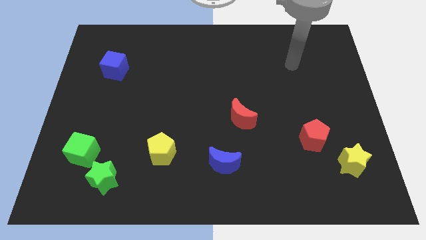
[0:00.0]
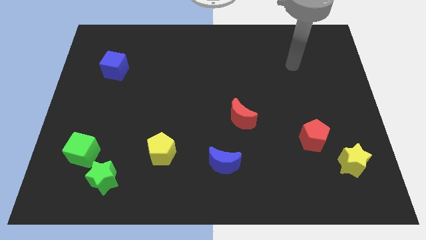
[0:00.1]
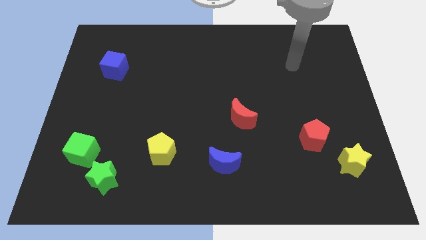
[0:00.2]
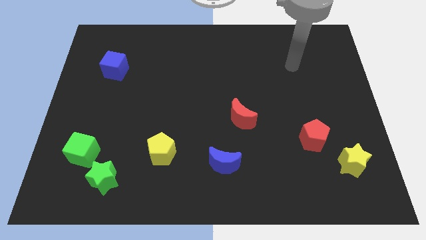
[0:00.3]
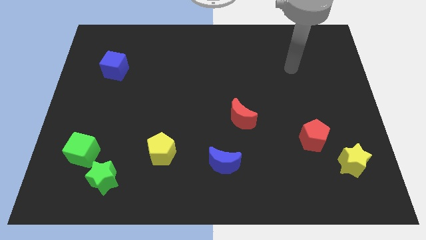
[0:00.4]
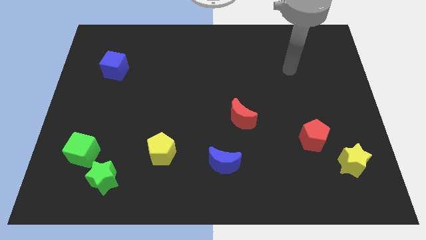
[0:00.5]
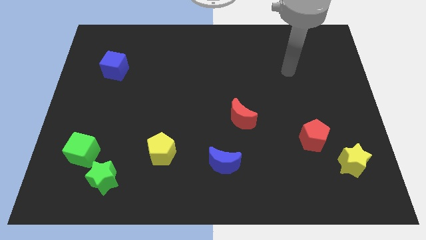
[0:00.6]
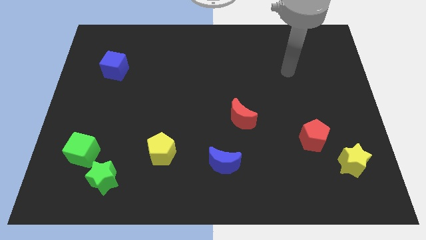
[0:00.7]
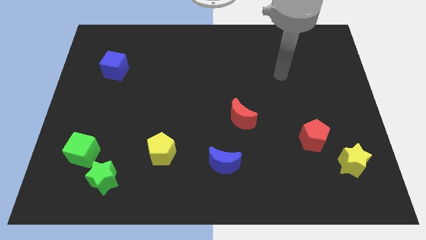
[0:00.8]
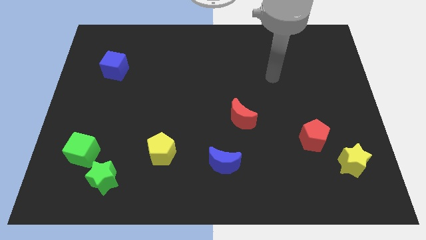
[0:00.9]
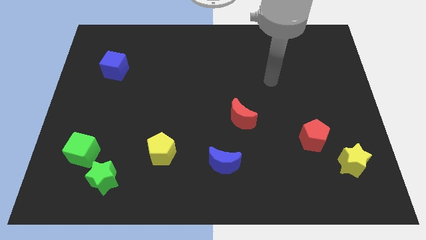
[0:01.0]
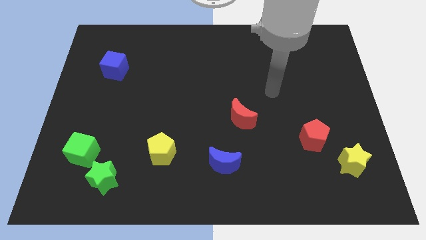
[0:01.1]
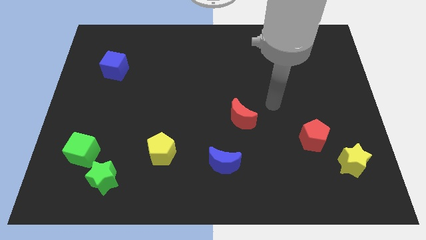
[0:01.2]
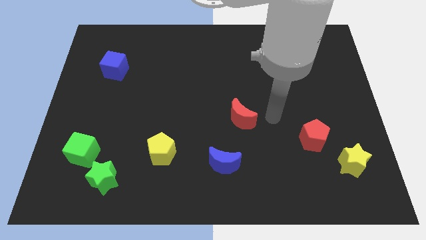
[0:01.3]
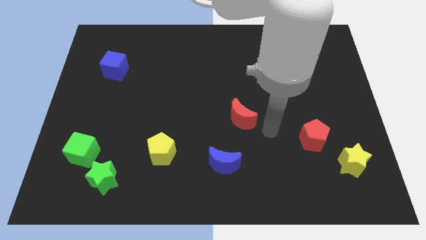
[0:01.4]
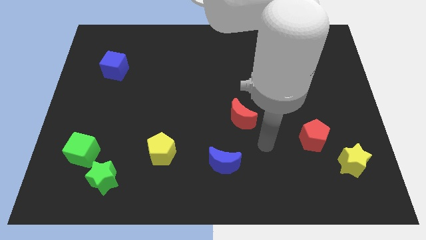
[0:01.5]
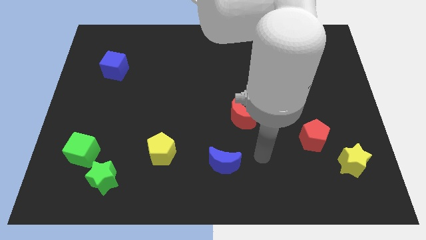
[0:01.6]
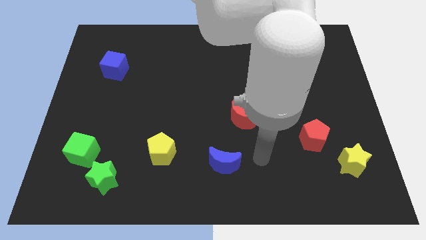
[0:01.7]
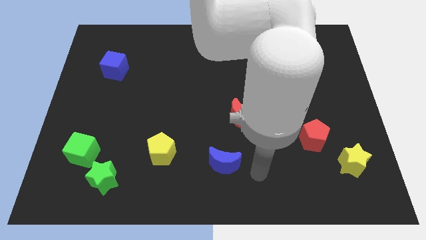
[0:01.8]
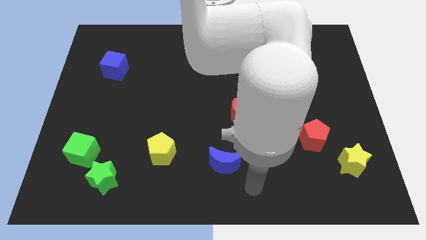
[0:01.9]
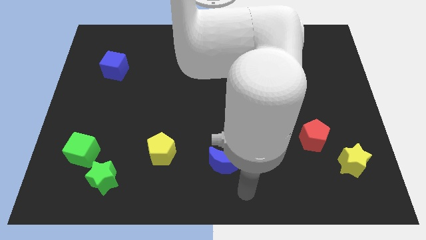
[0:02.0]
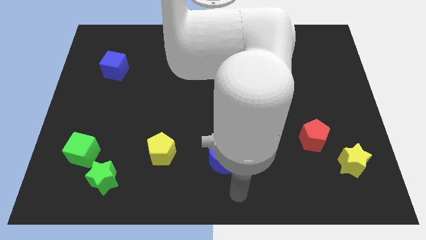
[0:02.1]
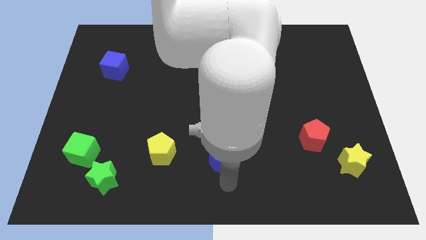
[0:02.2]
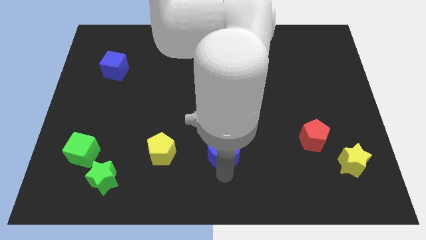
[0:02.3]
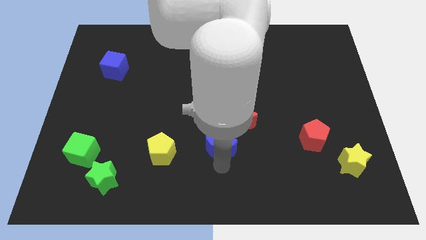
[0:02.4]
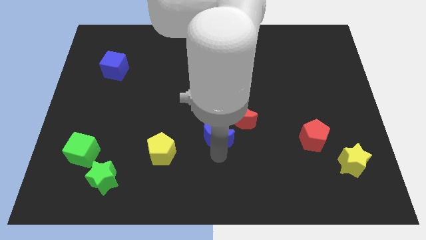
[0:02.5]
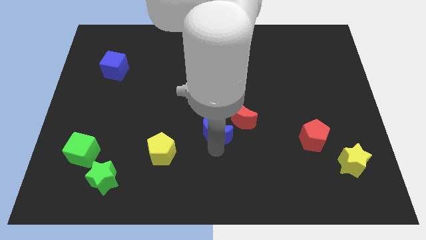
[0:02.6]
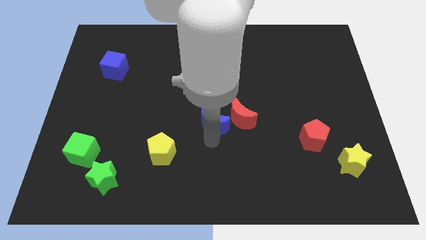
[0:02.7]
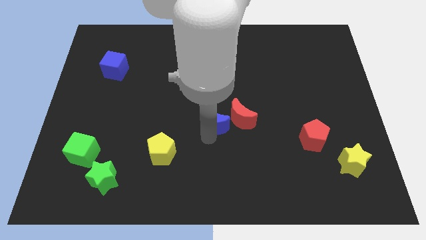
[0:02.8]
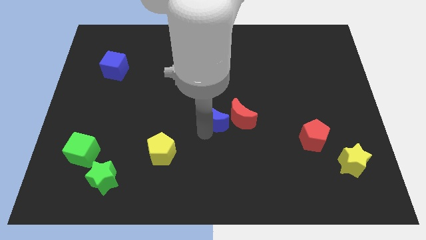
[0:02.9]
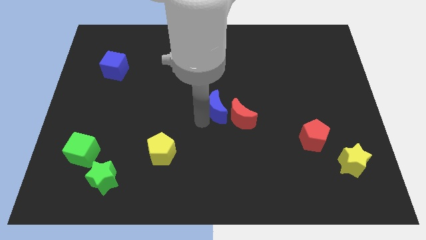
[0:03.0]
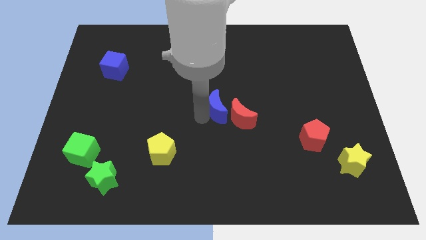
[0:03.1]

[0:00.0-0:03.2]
place the blue crescent at center of the board

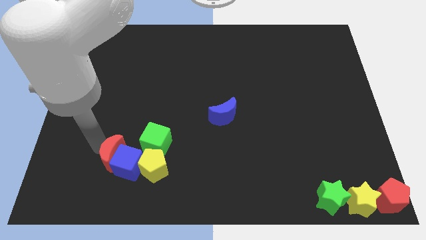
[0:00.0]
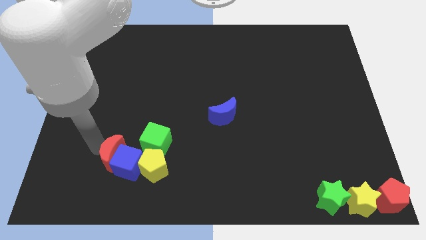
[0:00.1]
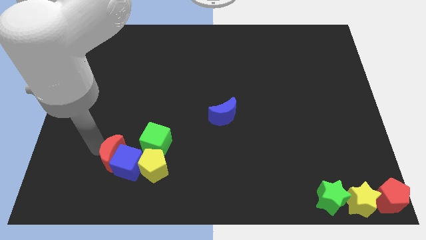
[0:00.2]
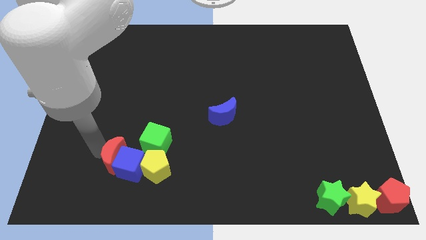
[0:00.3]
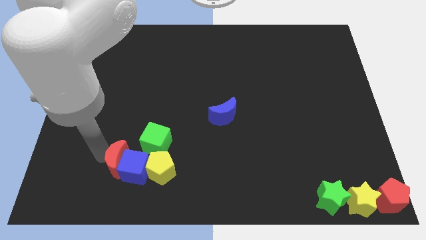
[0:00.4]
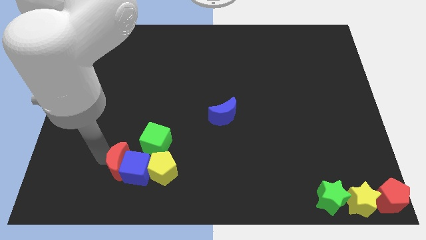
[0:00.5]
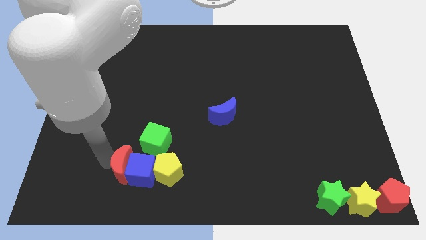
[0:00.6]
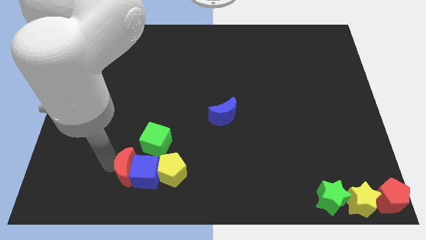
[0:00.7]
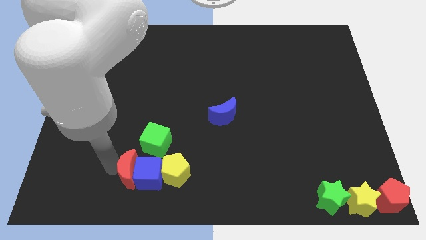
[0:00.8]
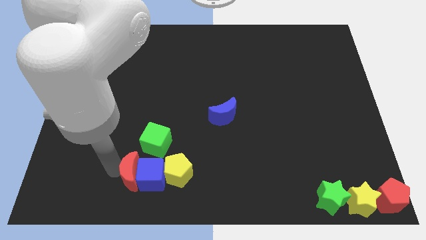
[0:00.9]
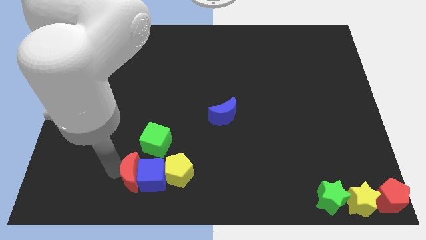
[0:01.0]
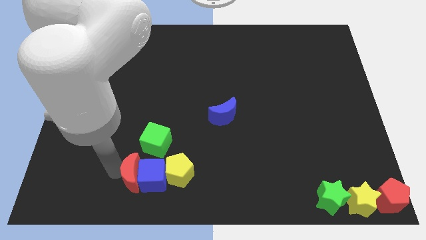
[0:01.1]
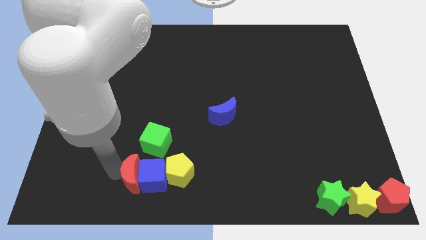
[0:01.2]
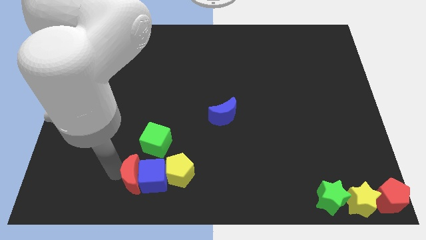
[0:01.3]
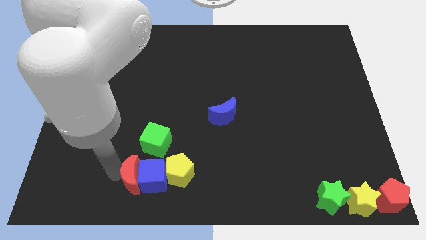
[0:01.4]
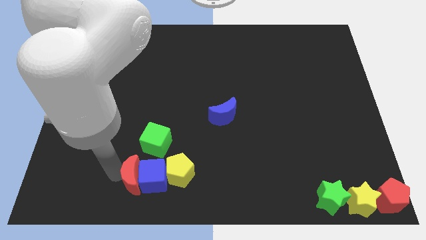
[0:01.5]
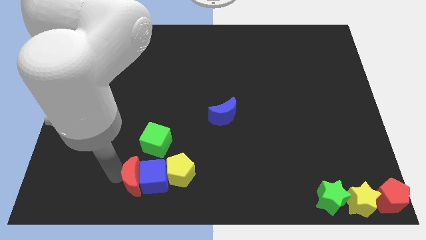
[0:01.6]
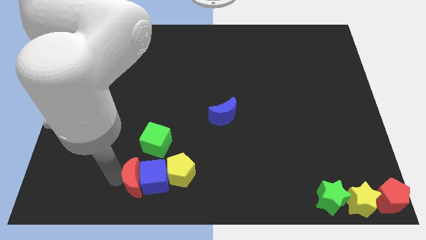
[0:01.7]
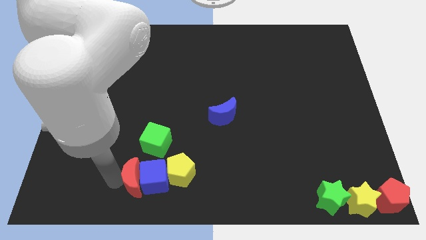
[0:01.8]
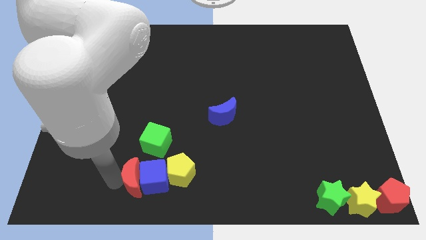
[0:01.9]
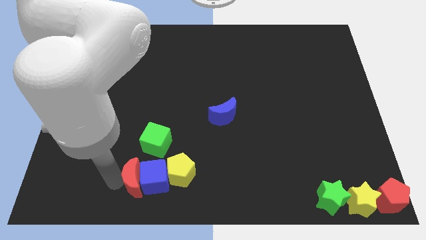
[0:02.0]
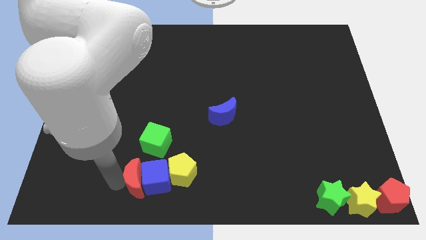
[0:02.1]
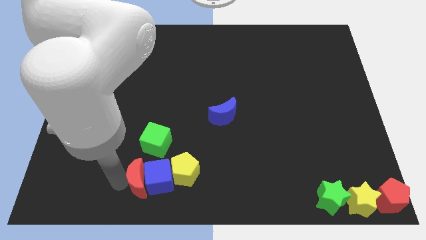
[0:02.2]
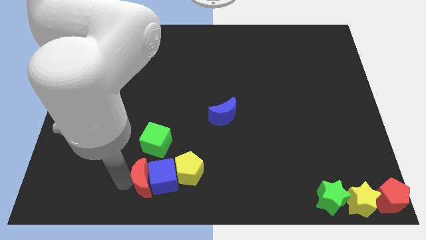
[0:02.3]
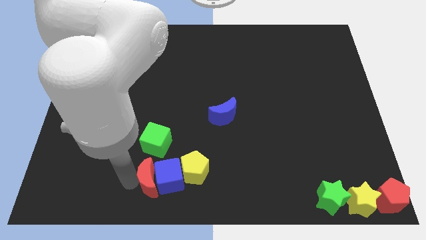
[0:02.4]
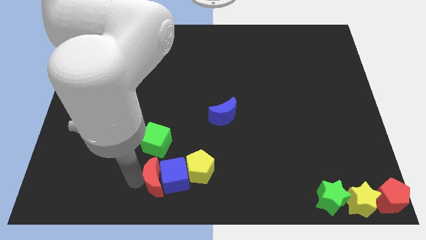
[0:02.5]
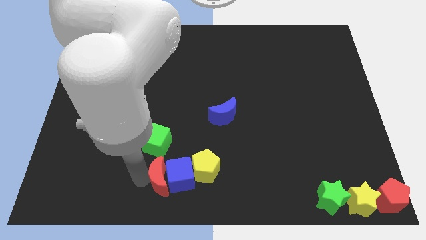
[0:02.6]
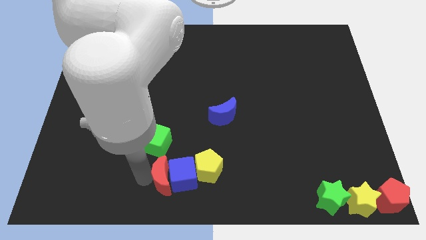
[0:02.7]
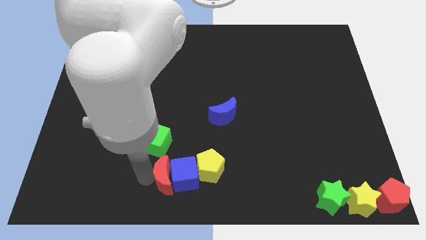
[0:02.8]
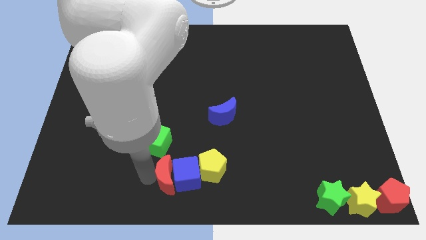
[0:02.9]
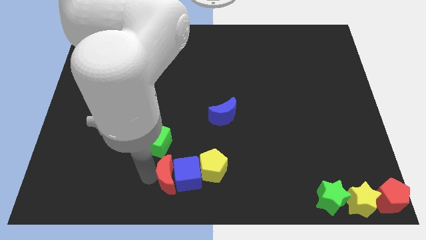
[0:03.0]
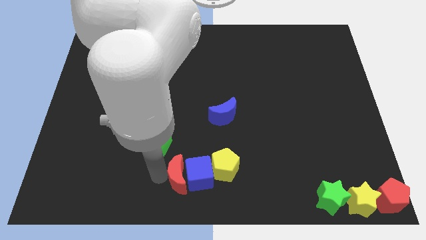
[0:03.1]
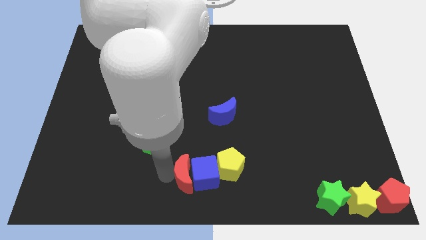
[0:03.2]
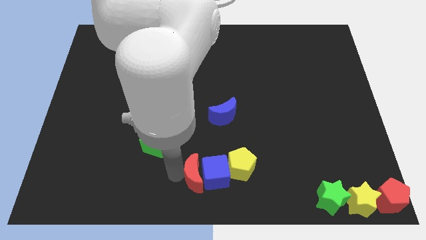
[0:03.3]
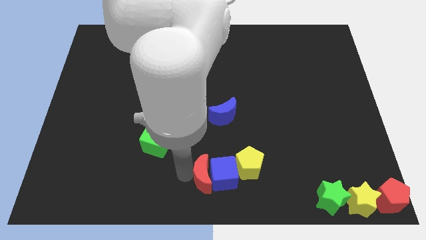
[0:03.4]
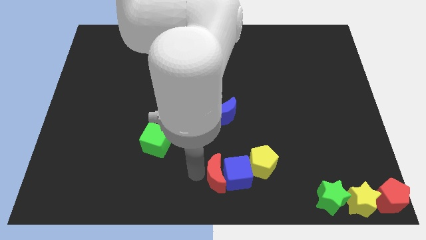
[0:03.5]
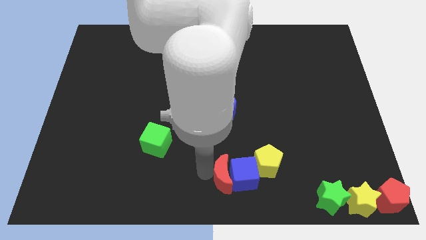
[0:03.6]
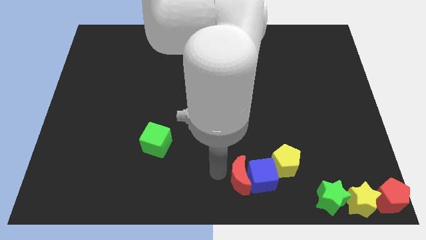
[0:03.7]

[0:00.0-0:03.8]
push yellow pentagon with red crescent along with blue cube

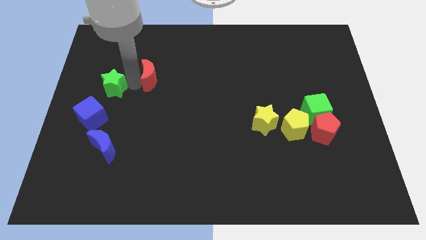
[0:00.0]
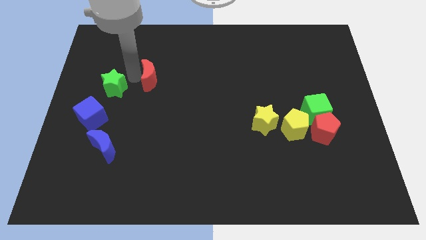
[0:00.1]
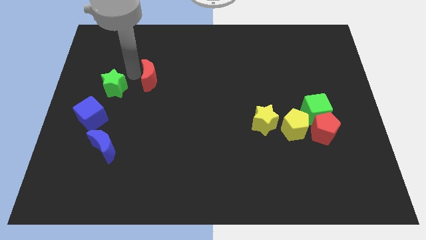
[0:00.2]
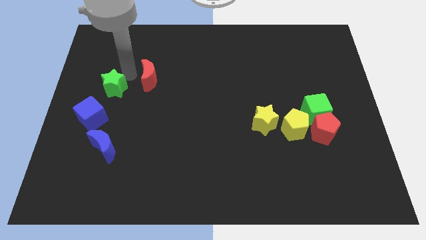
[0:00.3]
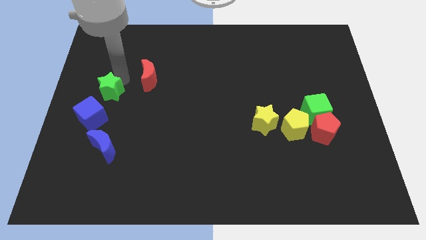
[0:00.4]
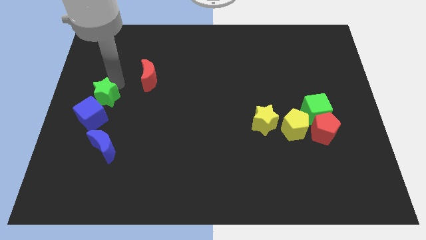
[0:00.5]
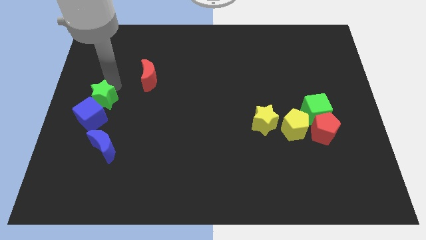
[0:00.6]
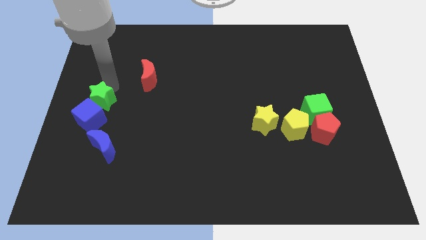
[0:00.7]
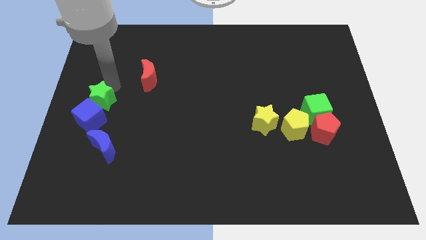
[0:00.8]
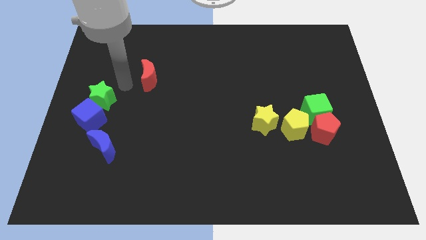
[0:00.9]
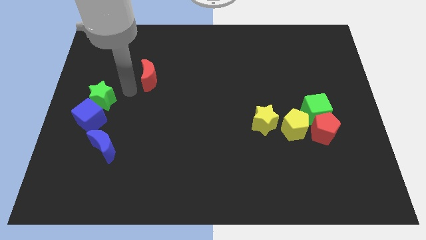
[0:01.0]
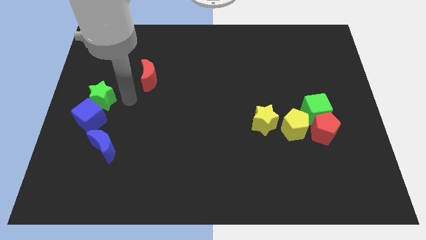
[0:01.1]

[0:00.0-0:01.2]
move the green star into the blue cube

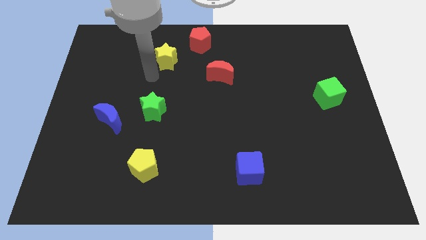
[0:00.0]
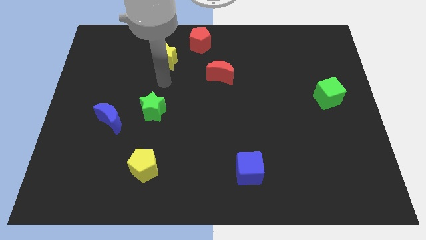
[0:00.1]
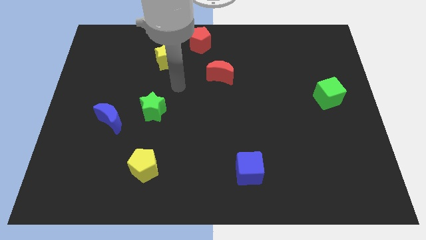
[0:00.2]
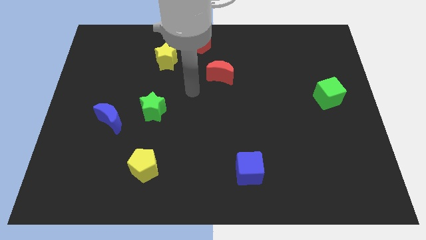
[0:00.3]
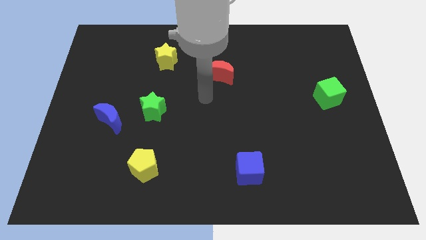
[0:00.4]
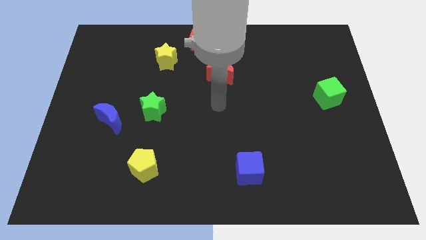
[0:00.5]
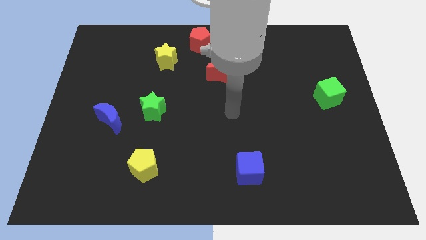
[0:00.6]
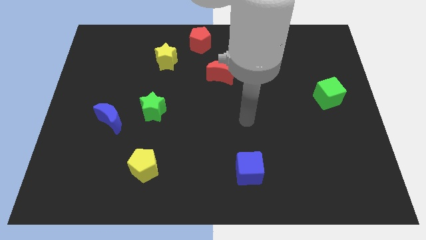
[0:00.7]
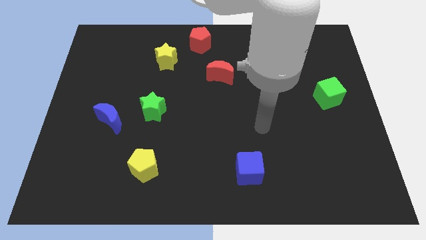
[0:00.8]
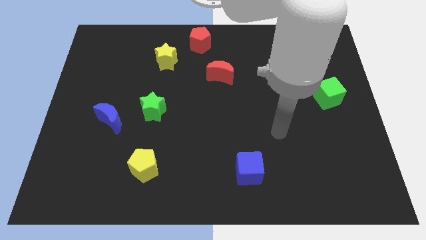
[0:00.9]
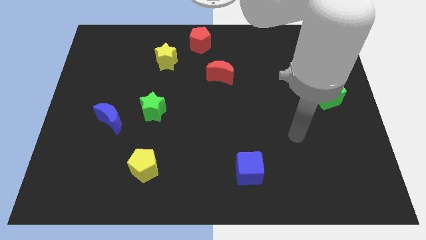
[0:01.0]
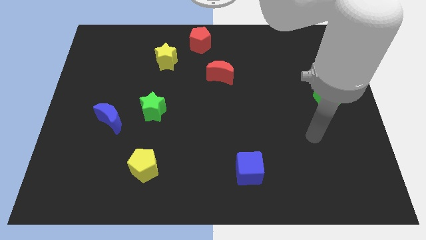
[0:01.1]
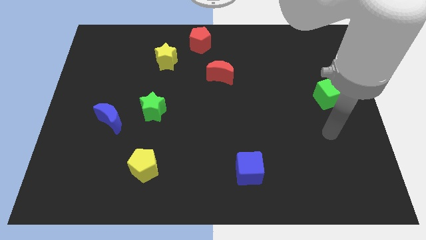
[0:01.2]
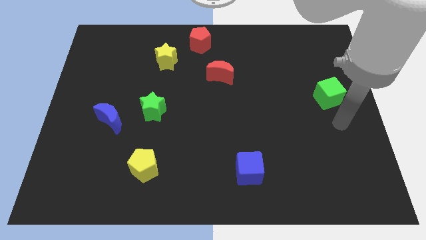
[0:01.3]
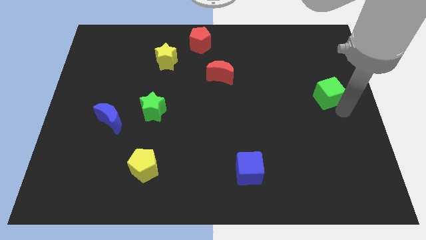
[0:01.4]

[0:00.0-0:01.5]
move your arm to the bottom of the green cube
